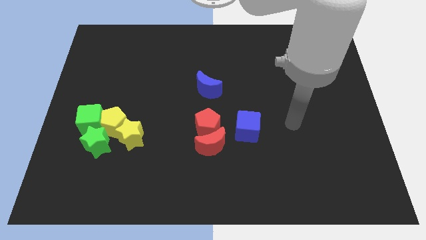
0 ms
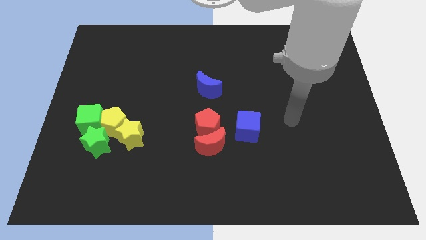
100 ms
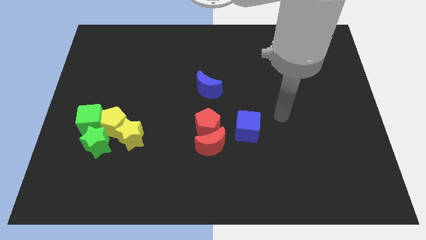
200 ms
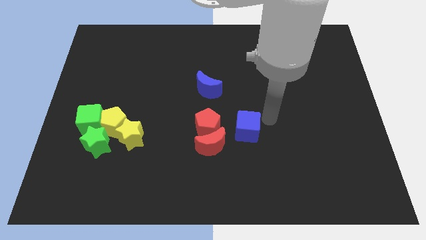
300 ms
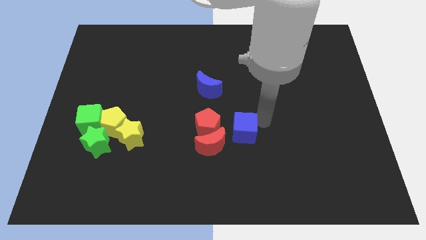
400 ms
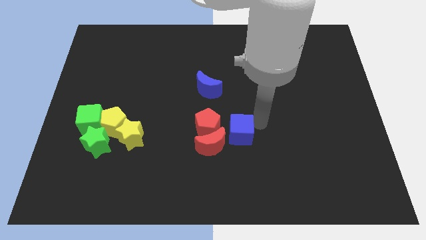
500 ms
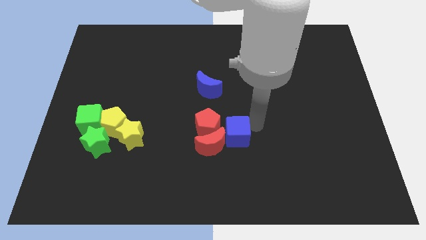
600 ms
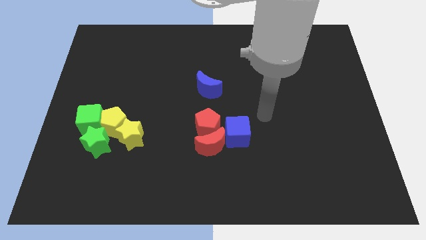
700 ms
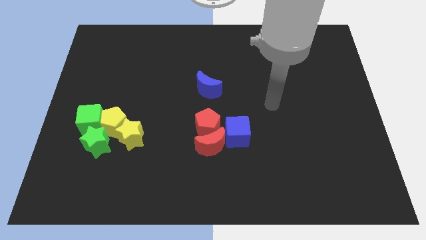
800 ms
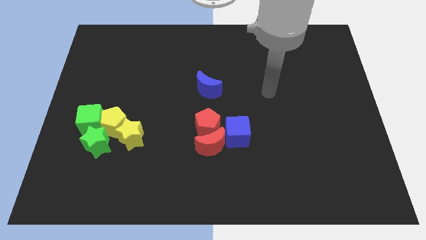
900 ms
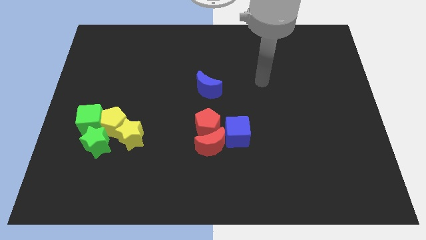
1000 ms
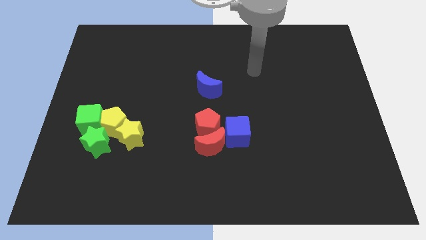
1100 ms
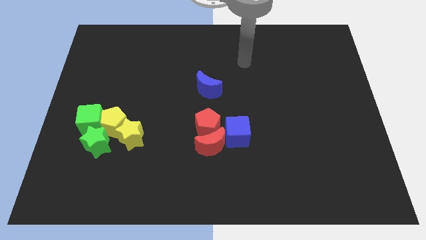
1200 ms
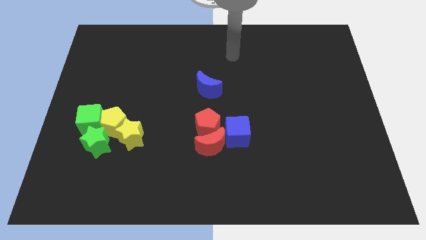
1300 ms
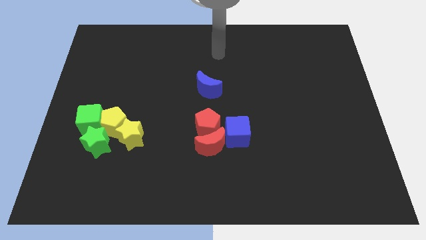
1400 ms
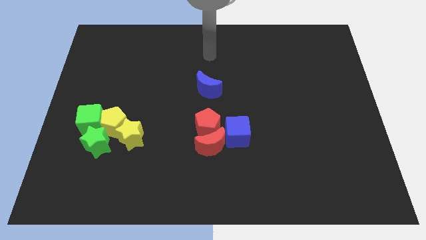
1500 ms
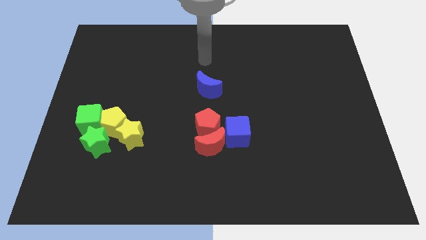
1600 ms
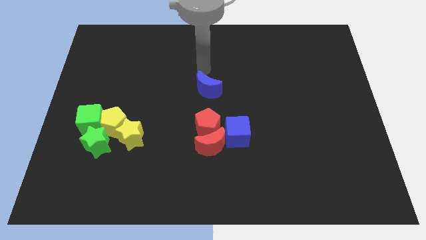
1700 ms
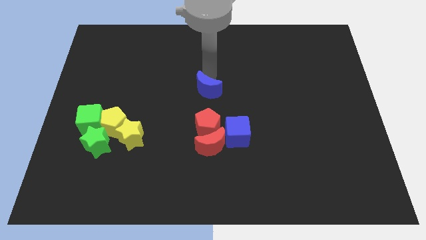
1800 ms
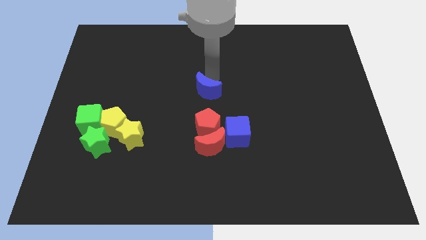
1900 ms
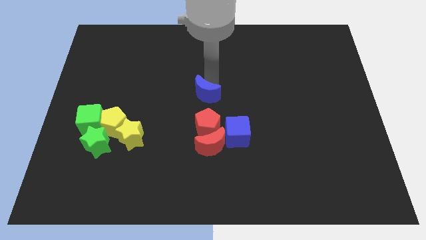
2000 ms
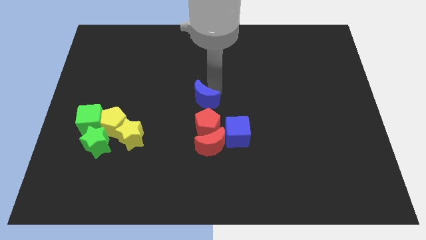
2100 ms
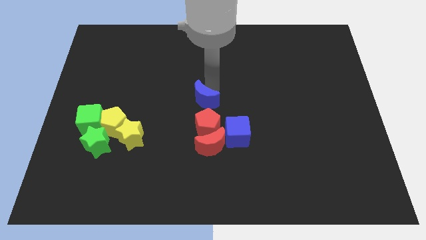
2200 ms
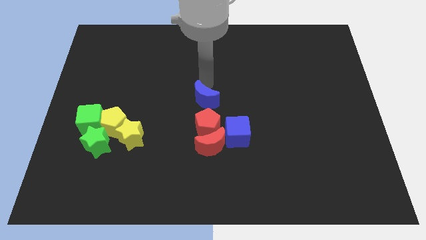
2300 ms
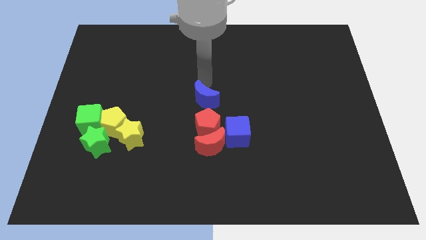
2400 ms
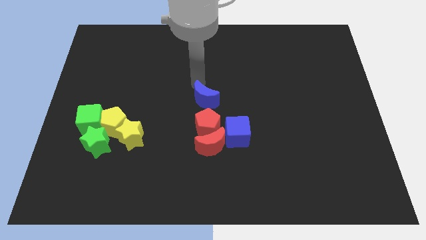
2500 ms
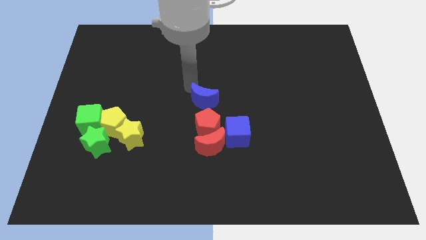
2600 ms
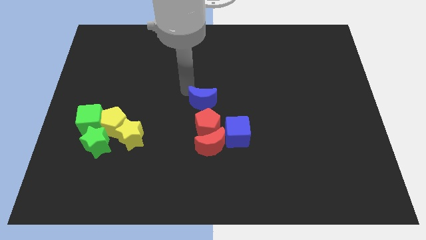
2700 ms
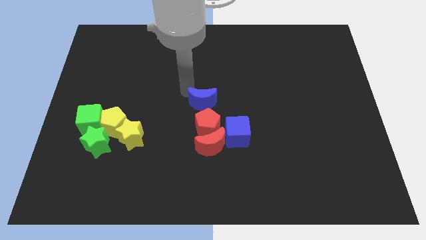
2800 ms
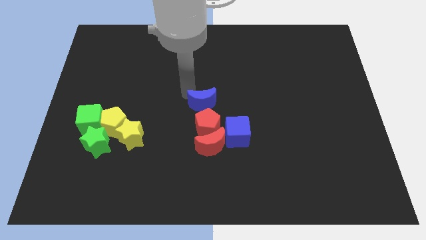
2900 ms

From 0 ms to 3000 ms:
move the blue moon close to the red pentagon

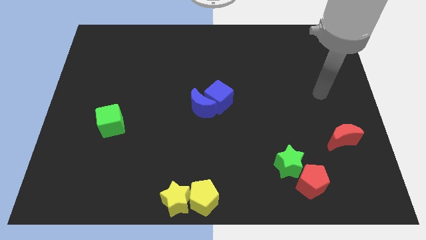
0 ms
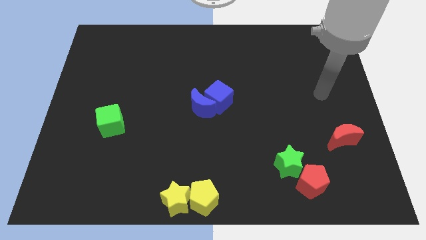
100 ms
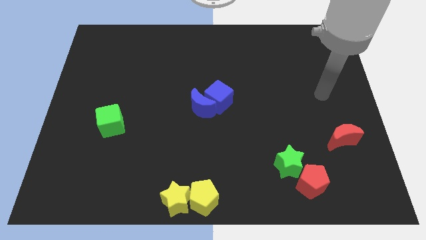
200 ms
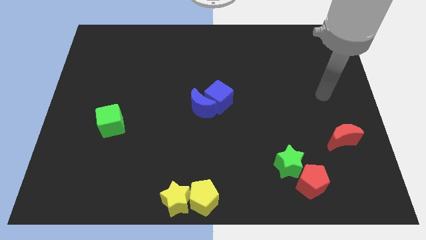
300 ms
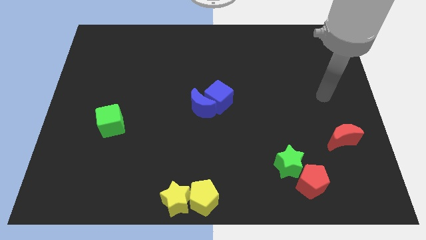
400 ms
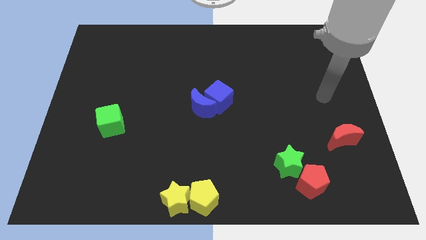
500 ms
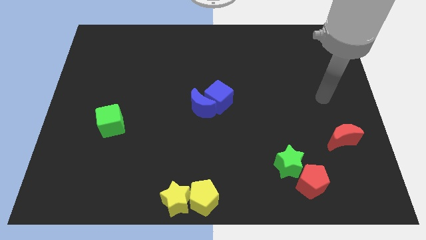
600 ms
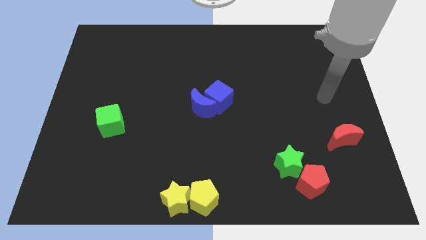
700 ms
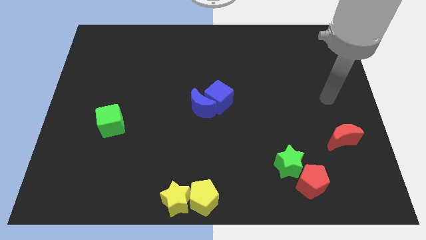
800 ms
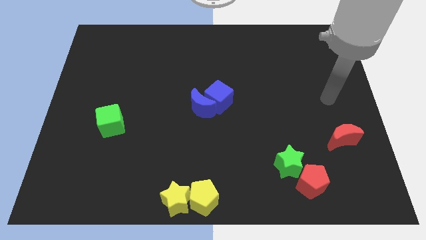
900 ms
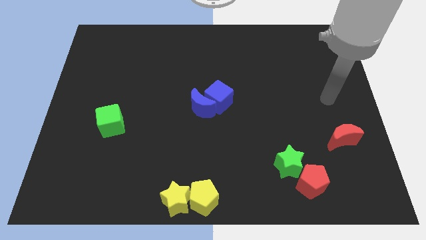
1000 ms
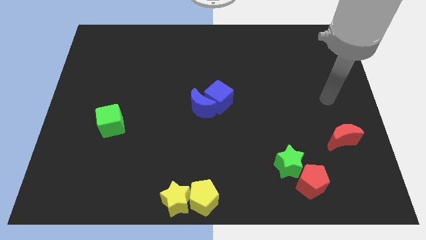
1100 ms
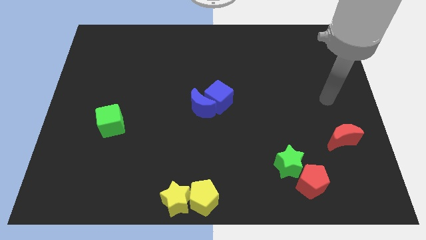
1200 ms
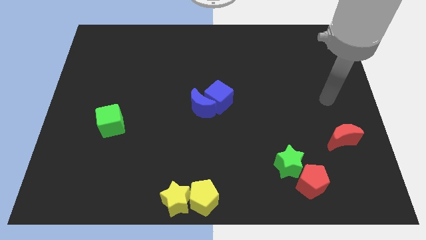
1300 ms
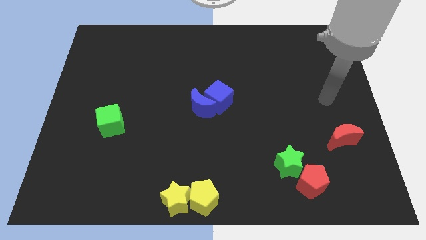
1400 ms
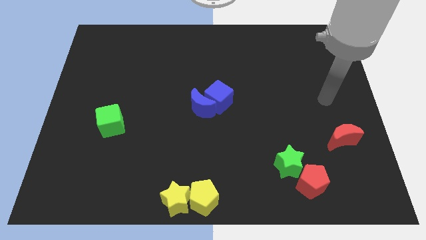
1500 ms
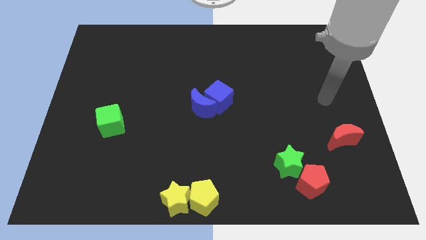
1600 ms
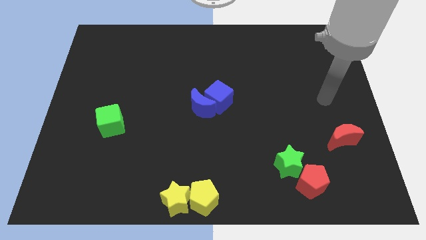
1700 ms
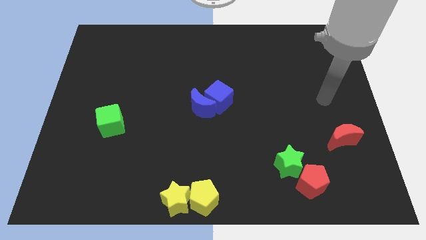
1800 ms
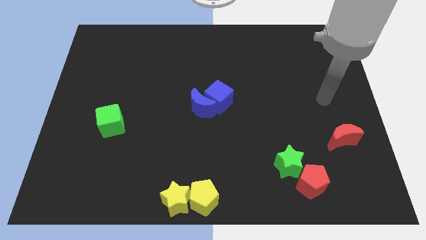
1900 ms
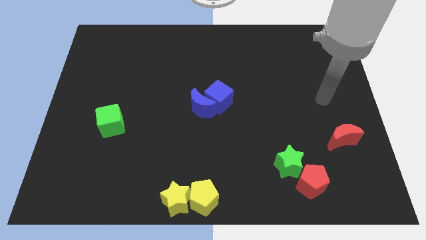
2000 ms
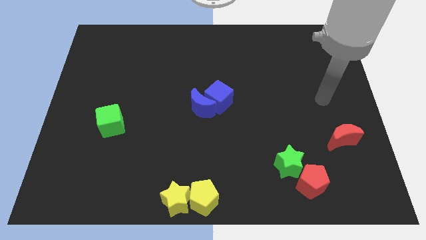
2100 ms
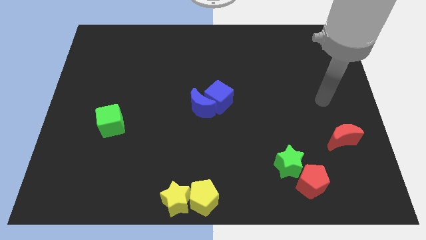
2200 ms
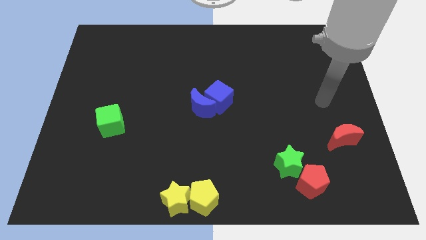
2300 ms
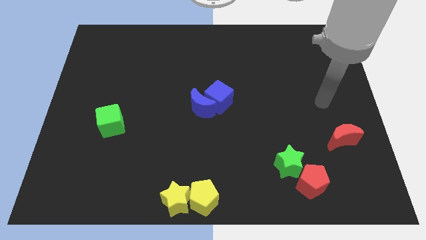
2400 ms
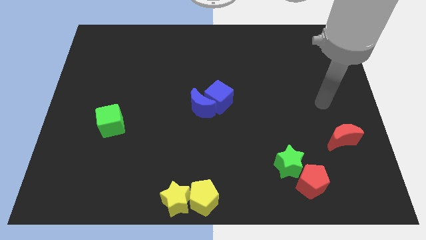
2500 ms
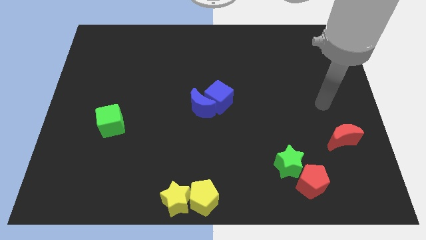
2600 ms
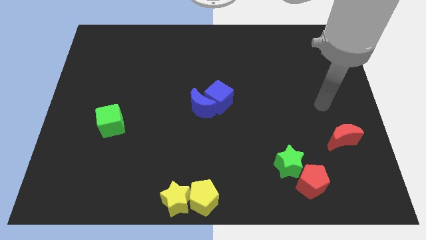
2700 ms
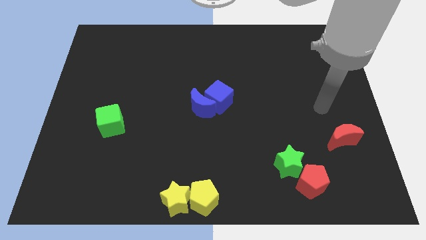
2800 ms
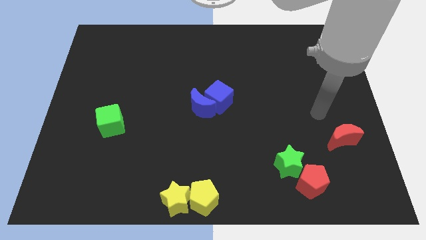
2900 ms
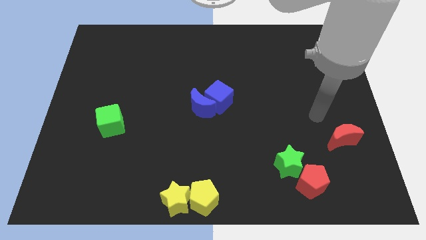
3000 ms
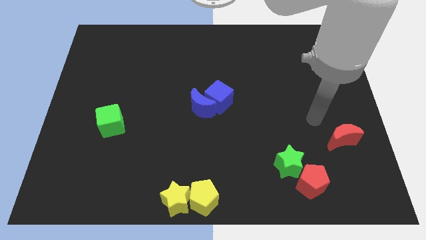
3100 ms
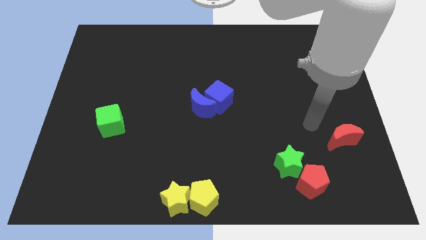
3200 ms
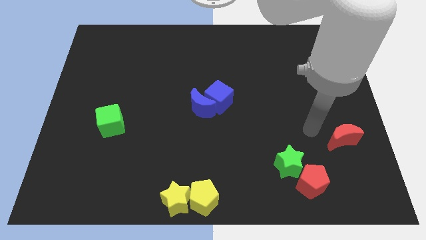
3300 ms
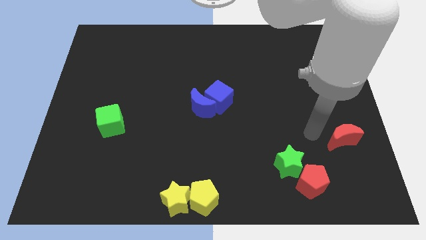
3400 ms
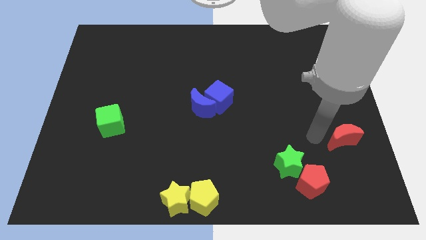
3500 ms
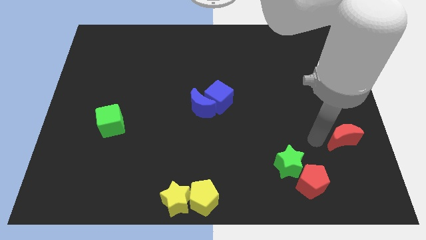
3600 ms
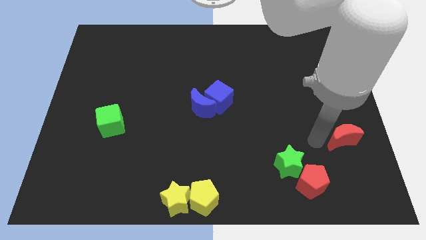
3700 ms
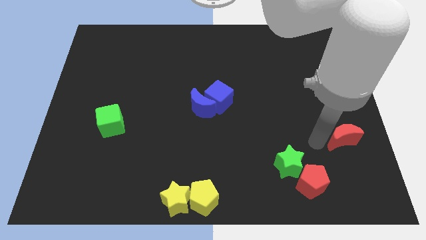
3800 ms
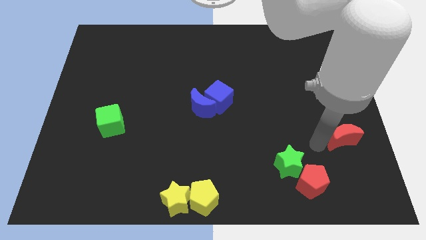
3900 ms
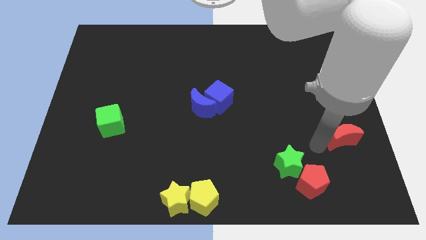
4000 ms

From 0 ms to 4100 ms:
move your arm left to the red crescent

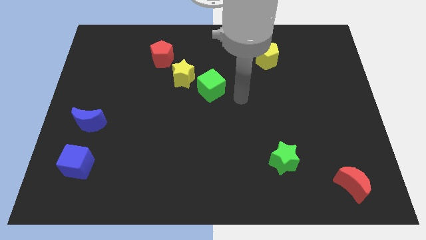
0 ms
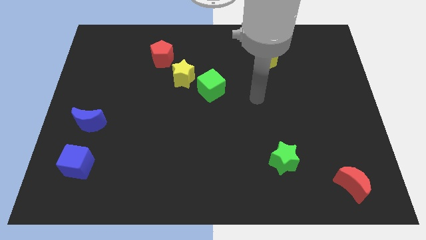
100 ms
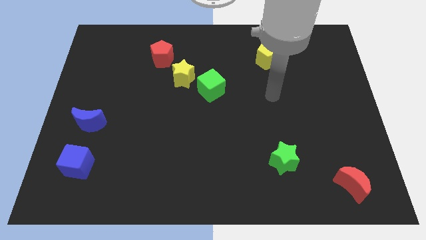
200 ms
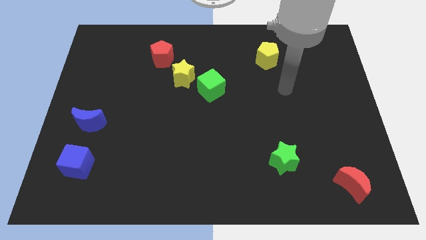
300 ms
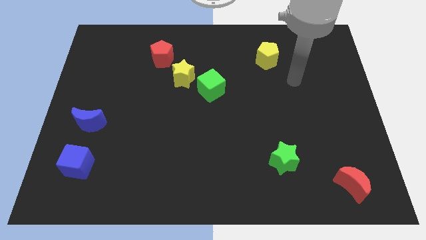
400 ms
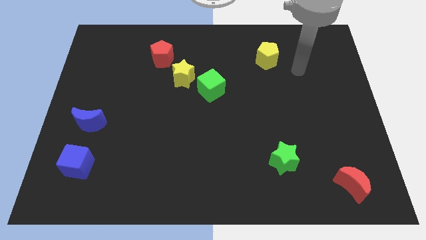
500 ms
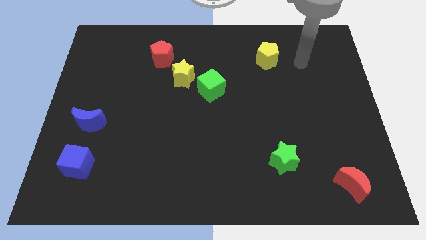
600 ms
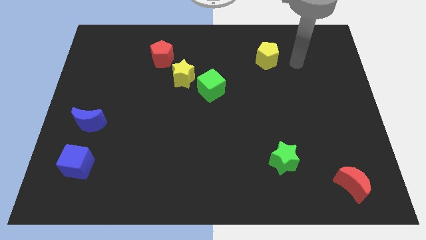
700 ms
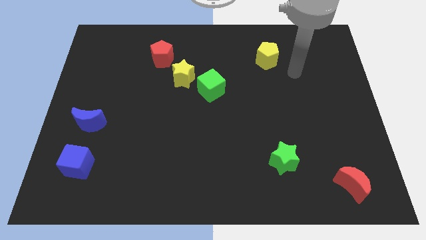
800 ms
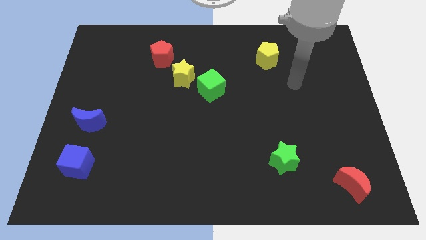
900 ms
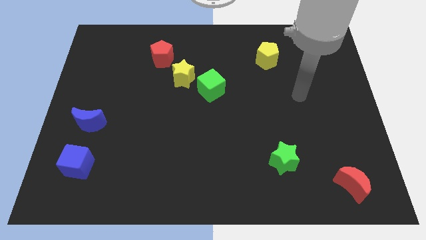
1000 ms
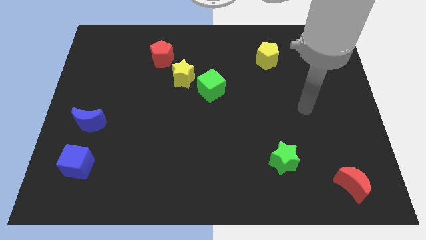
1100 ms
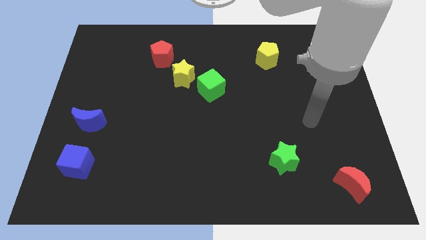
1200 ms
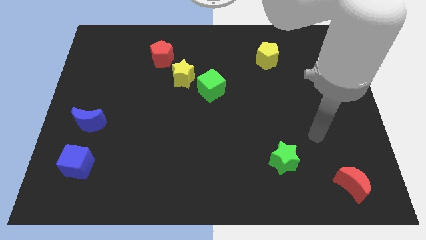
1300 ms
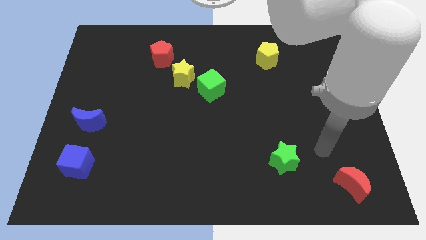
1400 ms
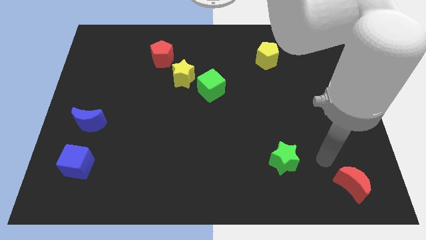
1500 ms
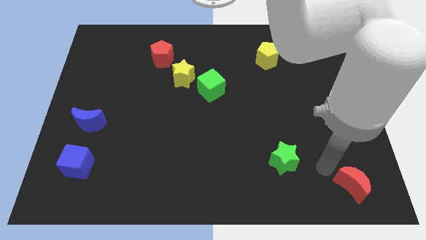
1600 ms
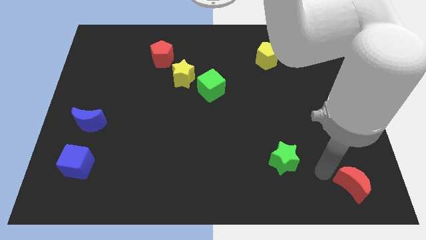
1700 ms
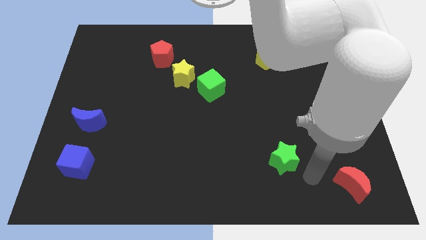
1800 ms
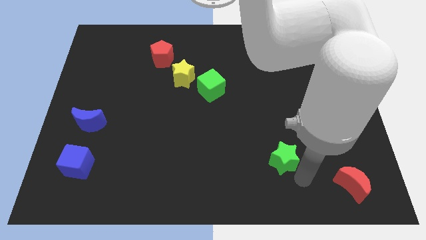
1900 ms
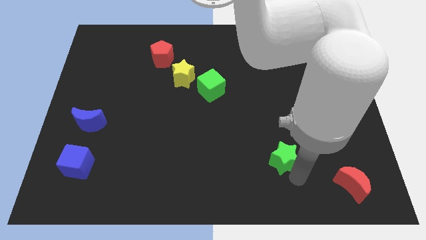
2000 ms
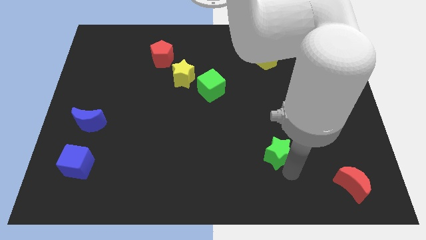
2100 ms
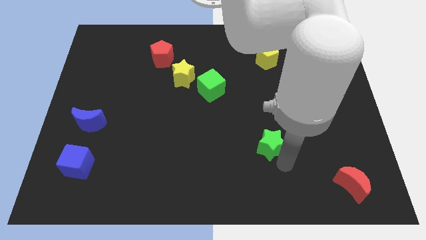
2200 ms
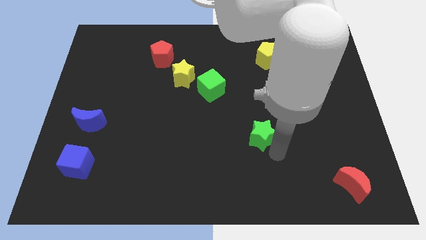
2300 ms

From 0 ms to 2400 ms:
move the green star to the bottom of the yellow pentagon
